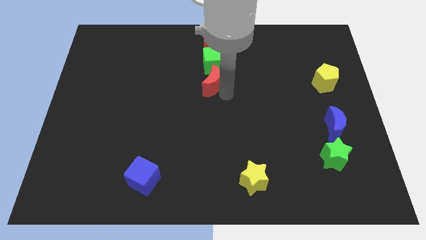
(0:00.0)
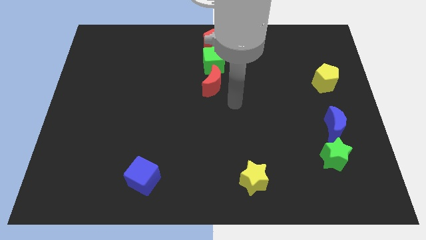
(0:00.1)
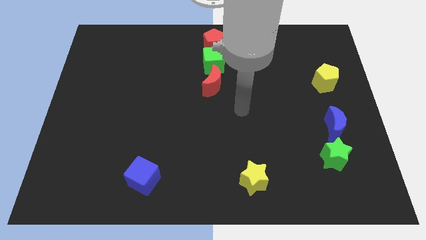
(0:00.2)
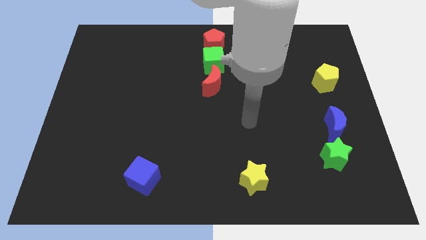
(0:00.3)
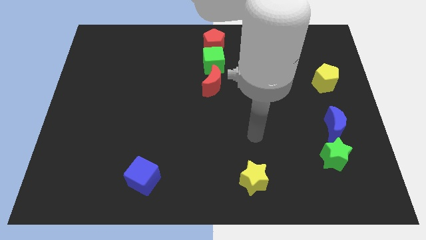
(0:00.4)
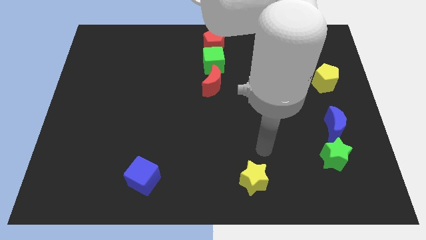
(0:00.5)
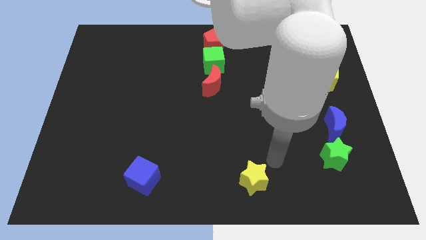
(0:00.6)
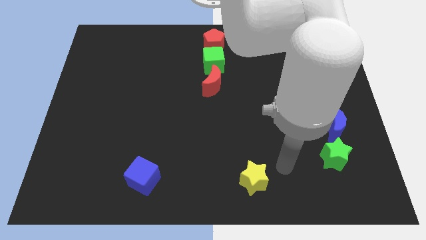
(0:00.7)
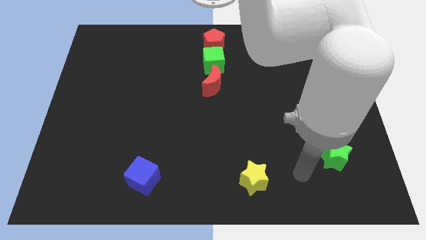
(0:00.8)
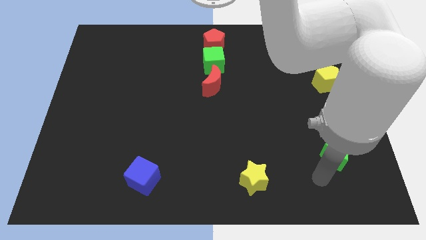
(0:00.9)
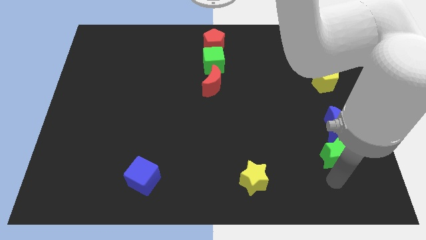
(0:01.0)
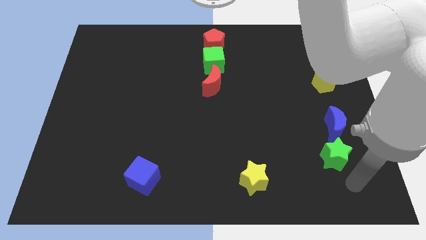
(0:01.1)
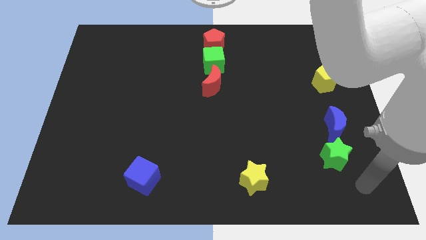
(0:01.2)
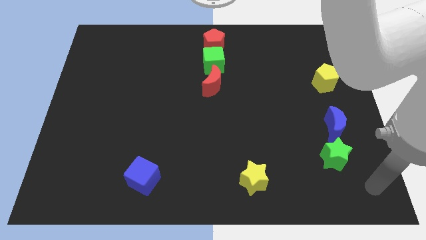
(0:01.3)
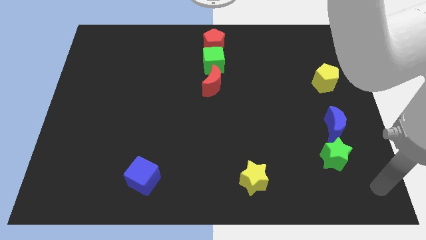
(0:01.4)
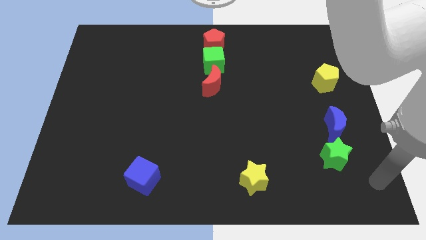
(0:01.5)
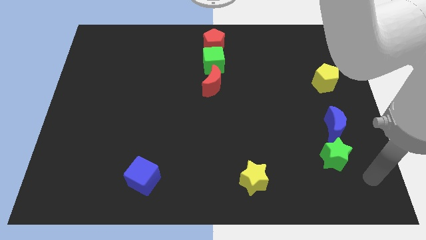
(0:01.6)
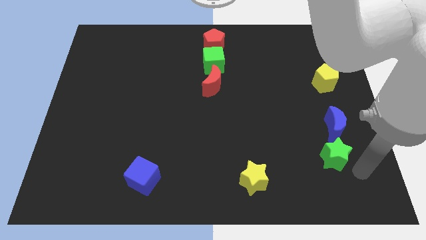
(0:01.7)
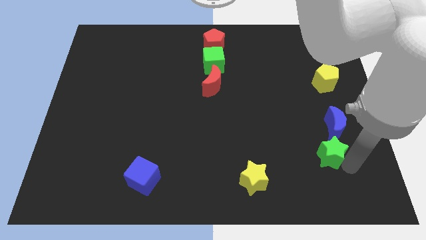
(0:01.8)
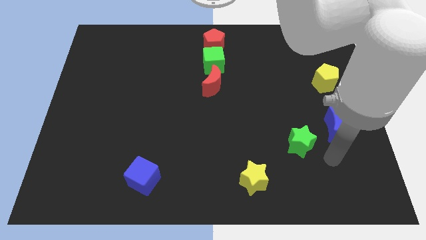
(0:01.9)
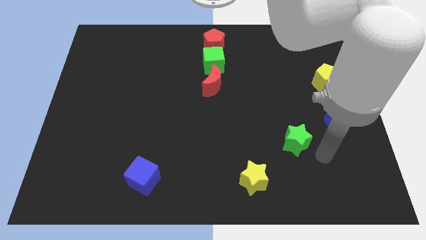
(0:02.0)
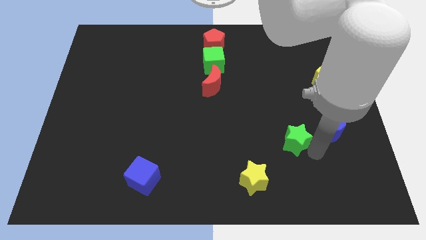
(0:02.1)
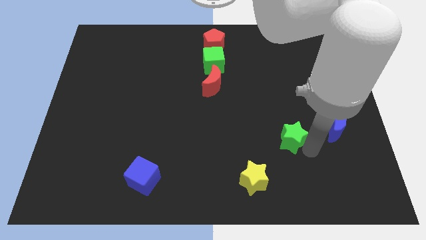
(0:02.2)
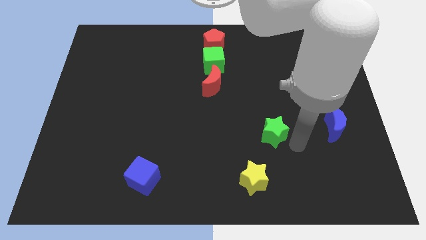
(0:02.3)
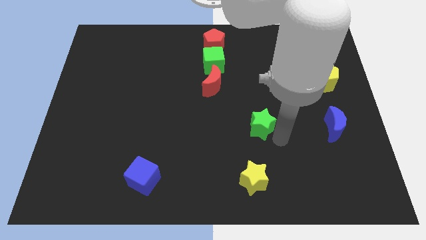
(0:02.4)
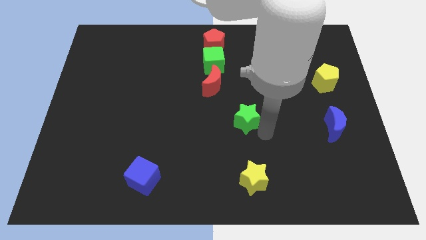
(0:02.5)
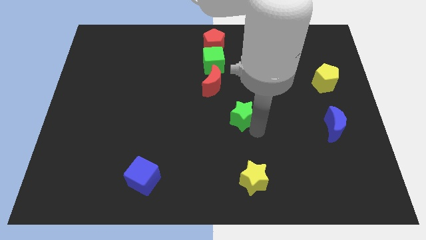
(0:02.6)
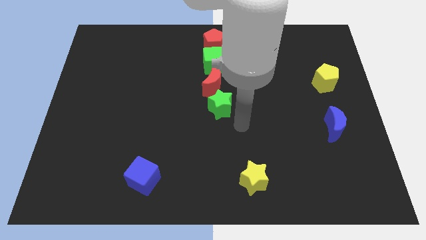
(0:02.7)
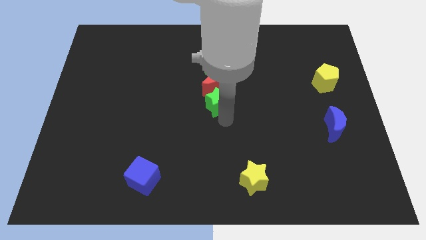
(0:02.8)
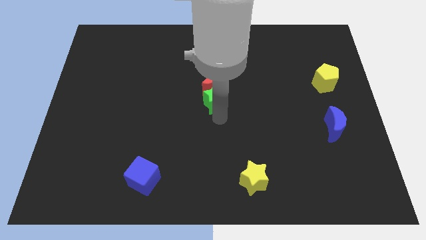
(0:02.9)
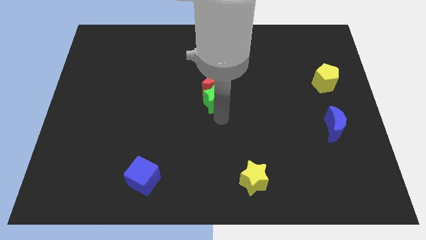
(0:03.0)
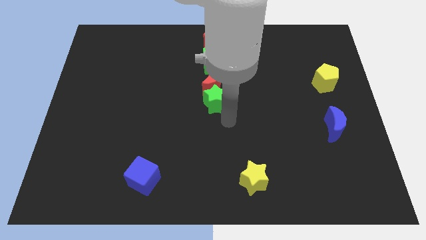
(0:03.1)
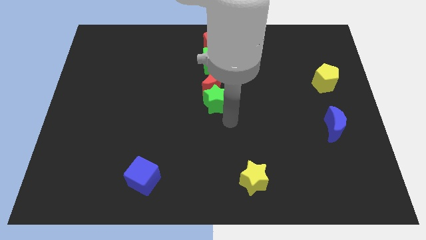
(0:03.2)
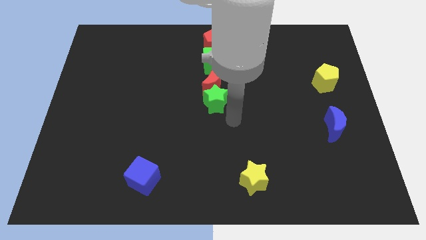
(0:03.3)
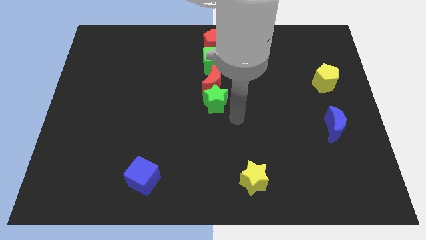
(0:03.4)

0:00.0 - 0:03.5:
move the green star below the red crescent

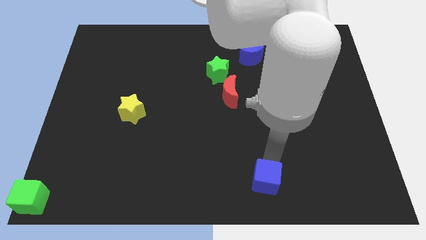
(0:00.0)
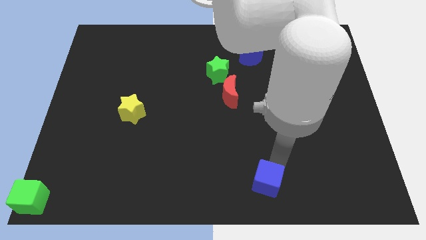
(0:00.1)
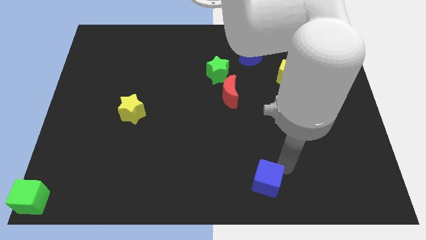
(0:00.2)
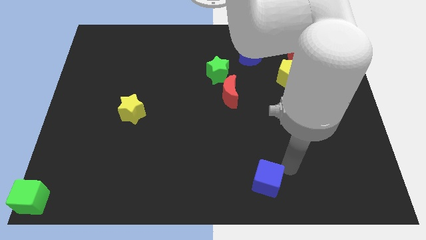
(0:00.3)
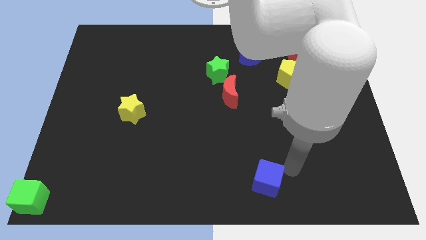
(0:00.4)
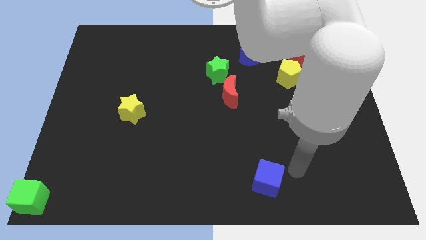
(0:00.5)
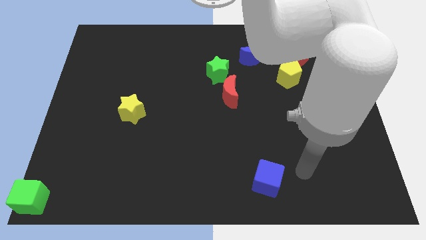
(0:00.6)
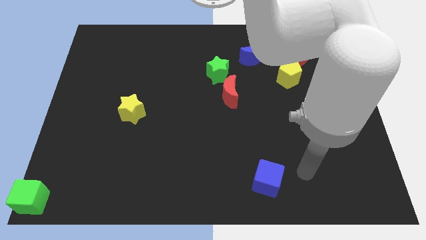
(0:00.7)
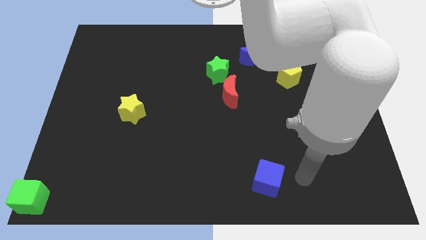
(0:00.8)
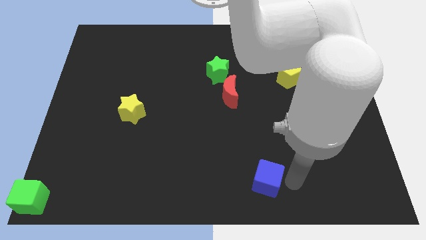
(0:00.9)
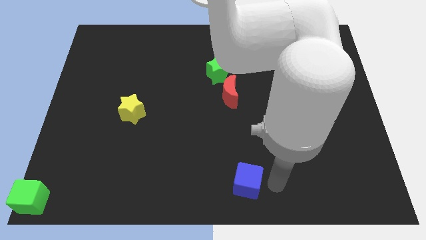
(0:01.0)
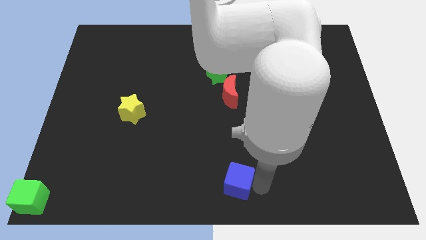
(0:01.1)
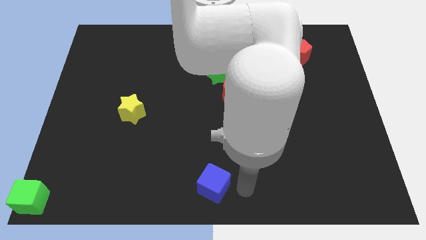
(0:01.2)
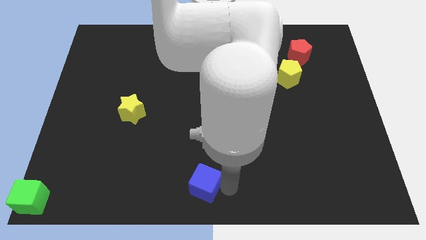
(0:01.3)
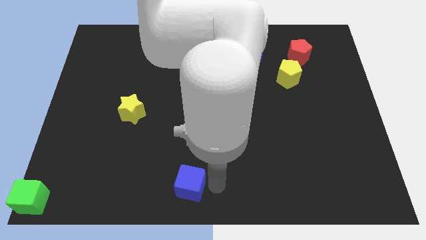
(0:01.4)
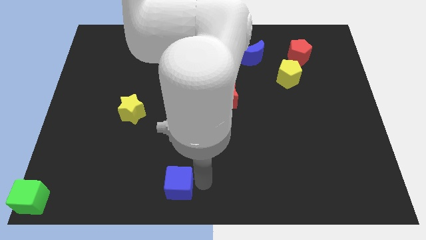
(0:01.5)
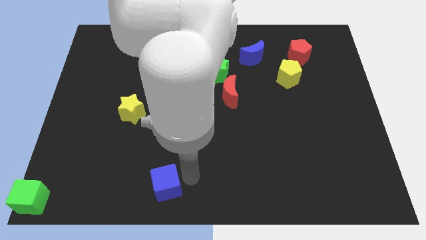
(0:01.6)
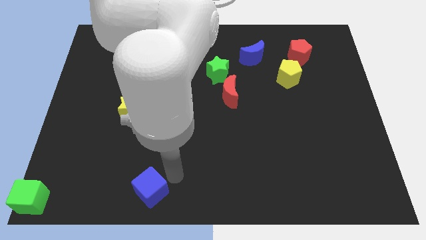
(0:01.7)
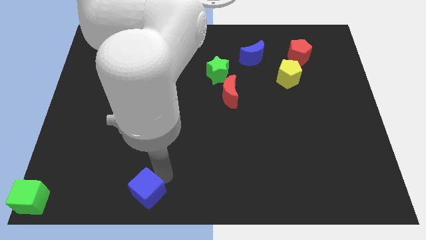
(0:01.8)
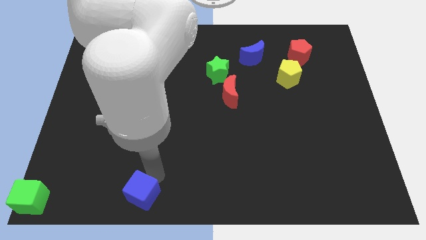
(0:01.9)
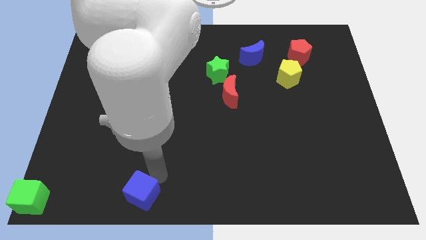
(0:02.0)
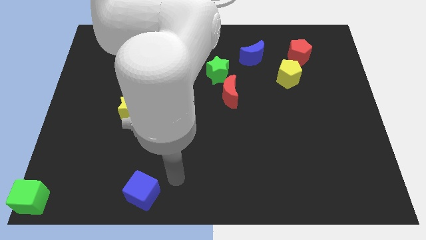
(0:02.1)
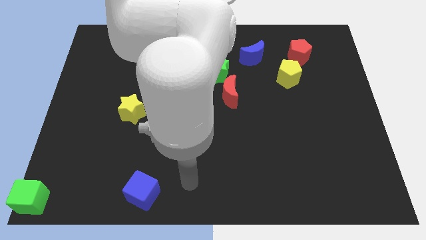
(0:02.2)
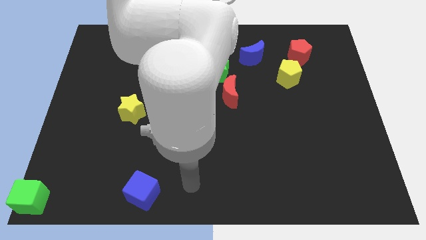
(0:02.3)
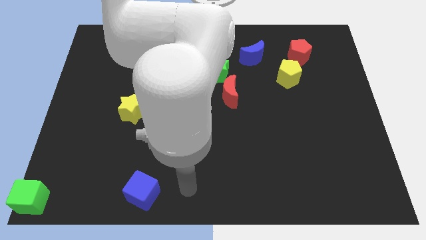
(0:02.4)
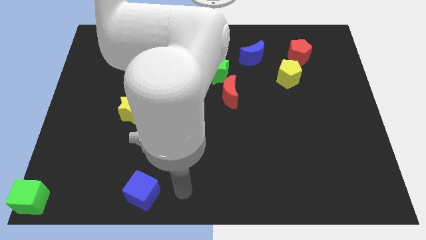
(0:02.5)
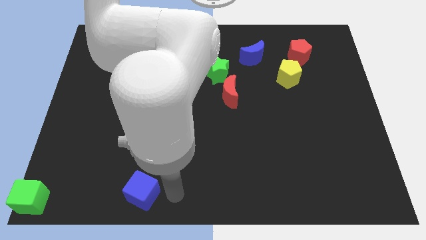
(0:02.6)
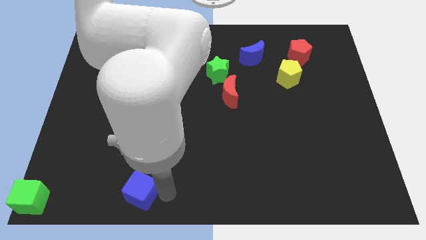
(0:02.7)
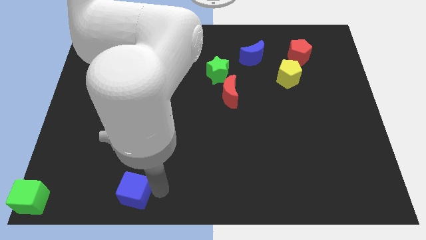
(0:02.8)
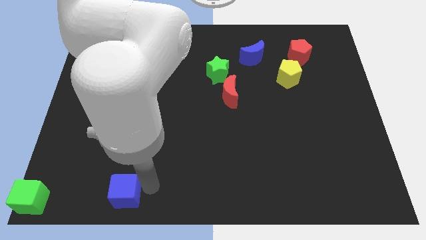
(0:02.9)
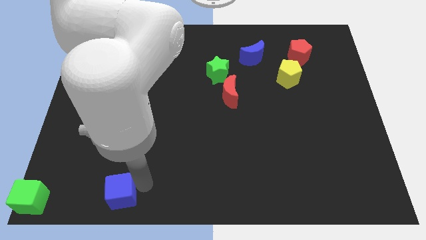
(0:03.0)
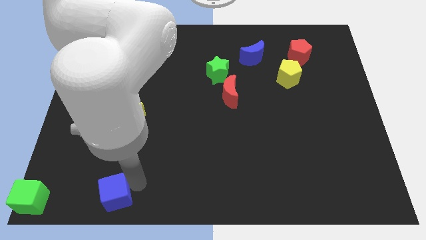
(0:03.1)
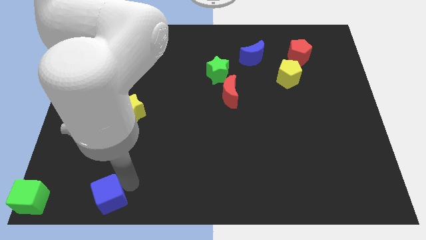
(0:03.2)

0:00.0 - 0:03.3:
move blue cube towards green cube

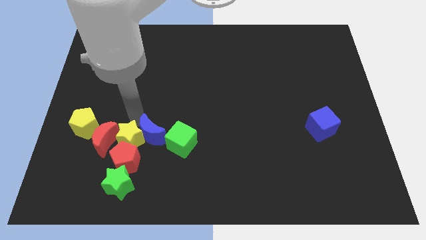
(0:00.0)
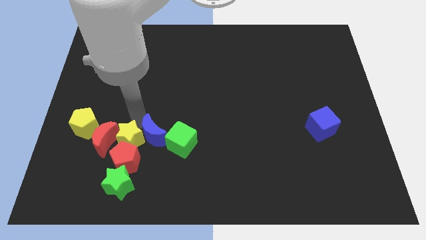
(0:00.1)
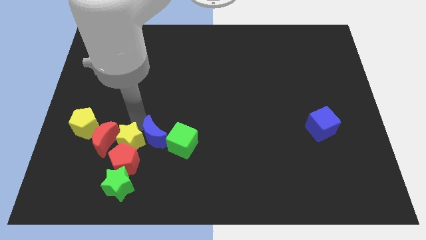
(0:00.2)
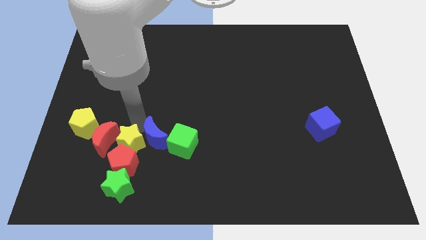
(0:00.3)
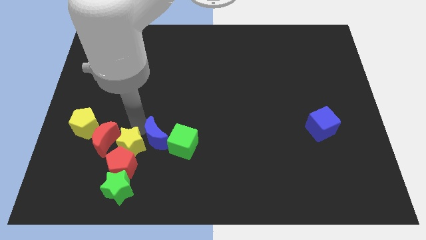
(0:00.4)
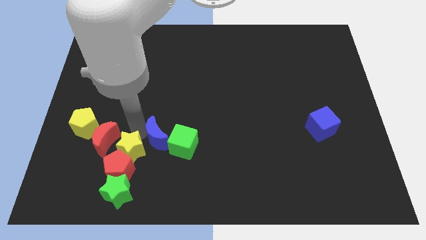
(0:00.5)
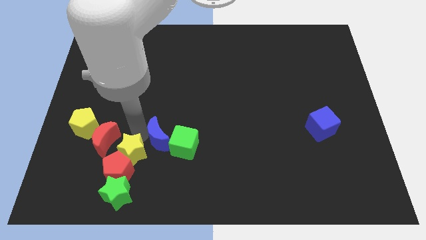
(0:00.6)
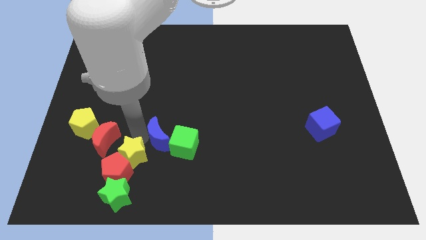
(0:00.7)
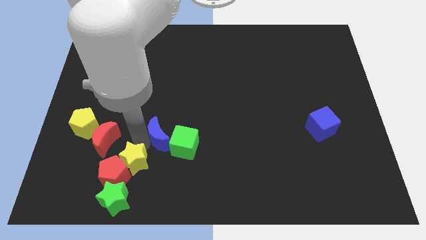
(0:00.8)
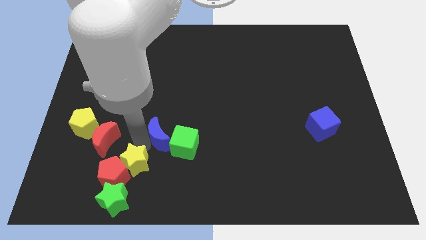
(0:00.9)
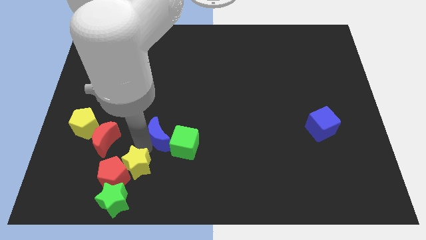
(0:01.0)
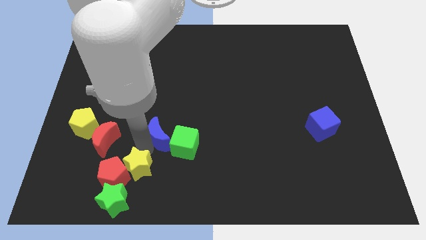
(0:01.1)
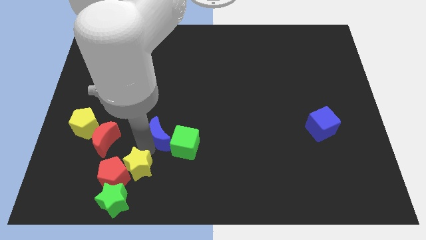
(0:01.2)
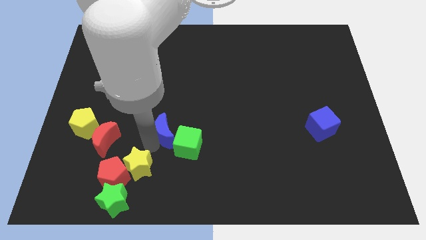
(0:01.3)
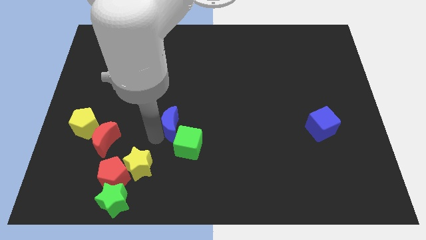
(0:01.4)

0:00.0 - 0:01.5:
slide yellow star slightly to the bottom side of the board

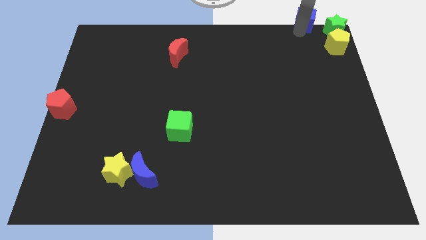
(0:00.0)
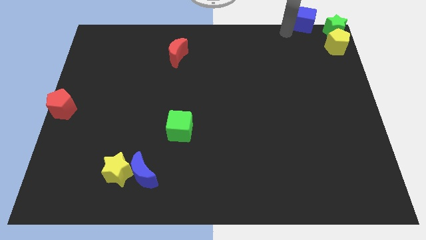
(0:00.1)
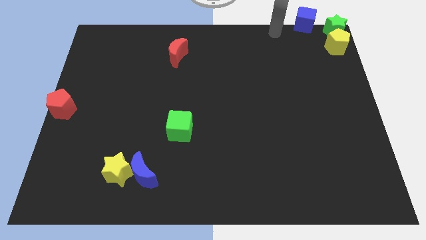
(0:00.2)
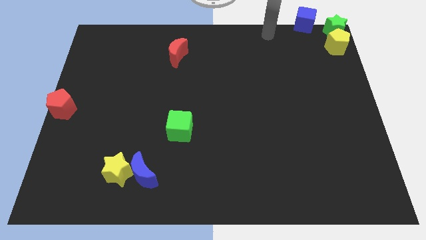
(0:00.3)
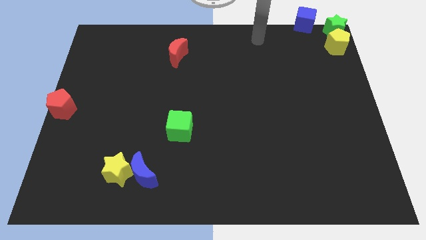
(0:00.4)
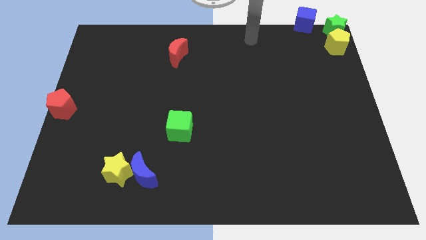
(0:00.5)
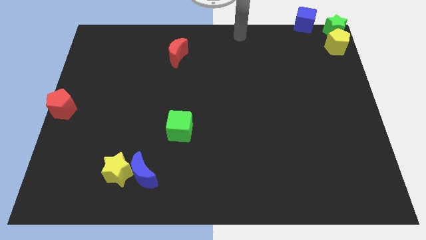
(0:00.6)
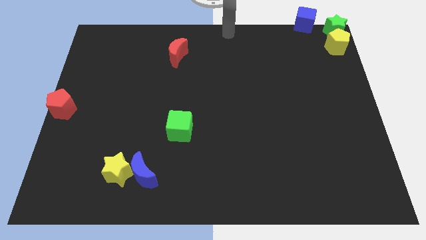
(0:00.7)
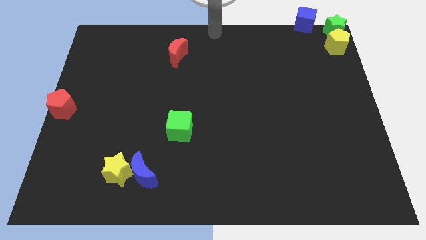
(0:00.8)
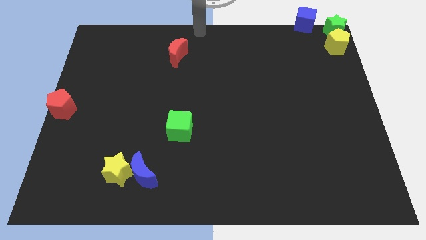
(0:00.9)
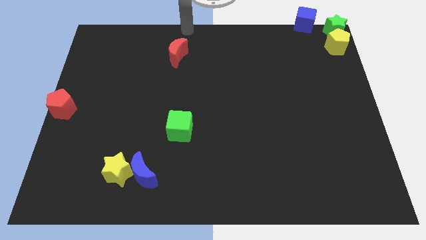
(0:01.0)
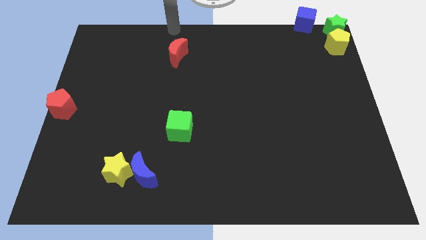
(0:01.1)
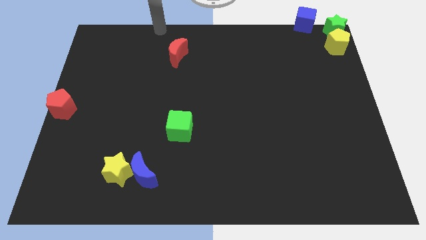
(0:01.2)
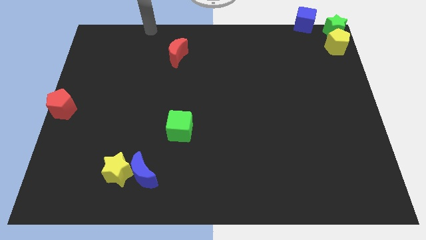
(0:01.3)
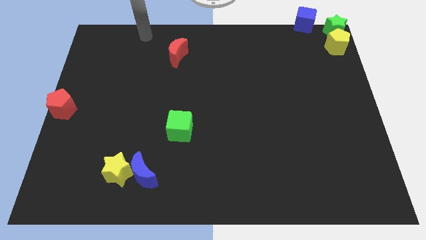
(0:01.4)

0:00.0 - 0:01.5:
move the arm away from the blue cube
